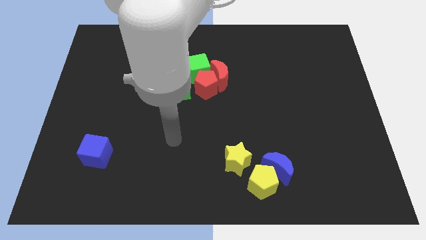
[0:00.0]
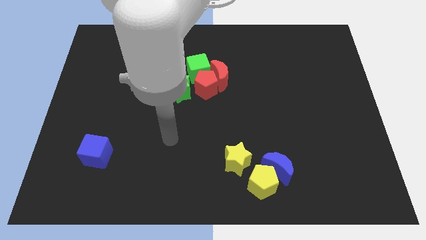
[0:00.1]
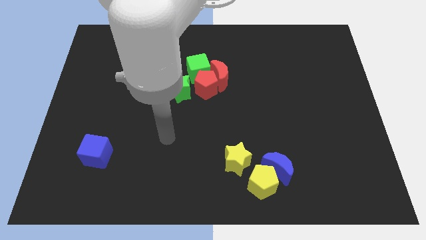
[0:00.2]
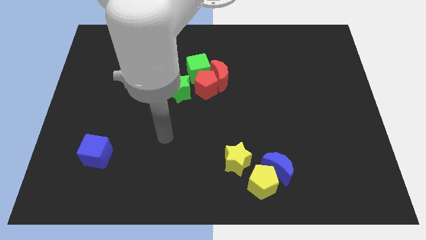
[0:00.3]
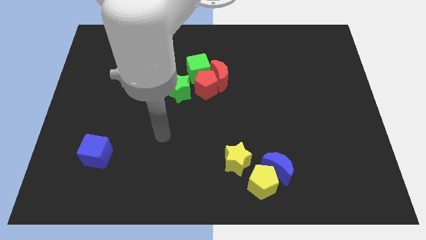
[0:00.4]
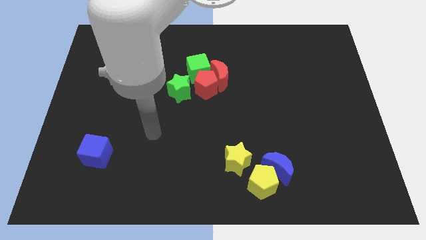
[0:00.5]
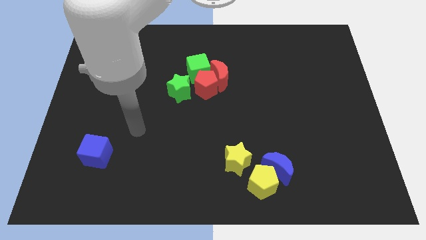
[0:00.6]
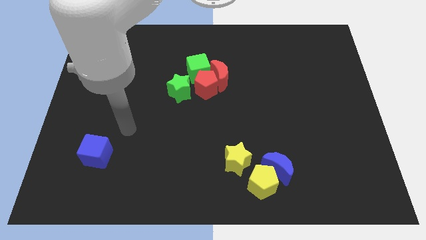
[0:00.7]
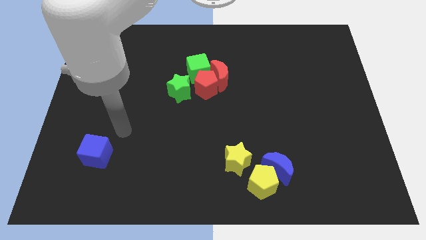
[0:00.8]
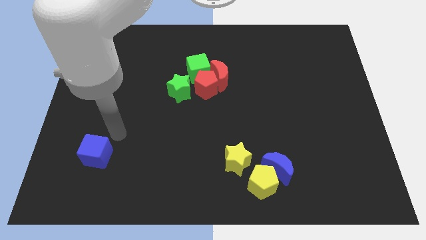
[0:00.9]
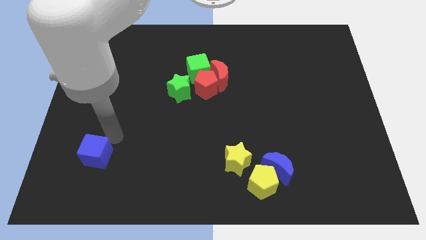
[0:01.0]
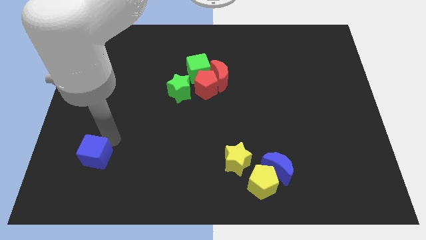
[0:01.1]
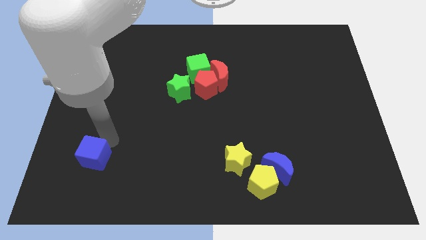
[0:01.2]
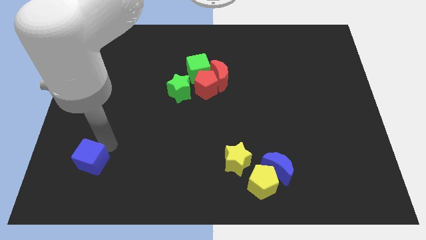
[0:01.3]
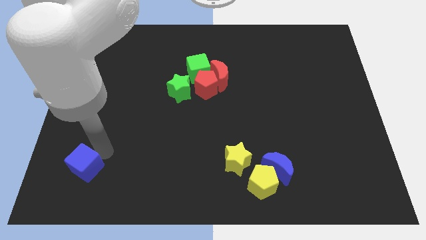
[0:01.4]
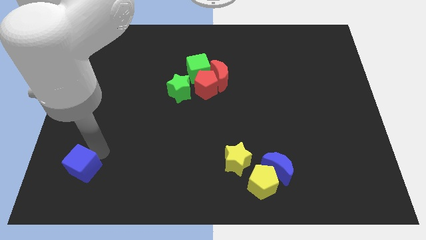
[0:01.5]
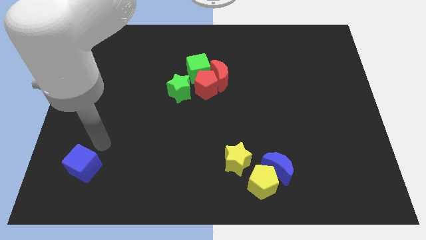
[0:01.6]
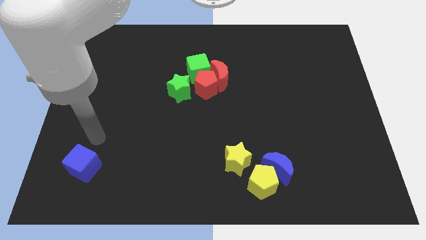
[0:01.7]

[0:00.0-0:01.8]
place your arm to top of the blue cube

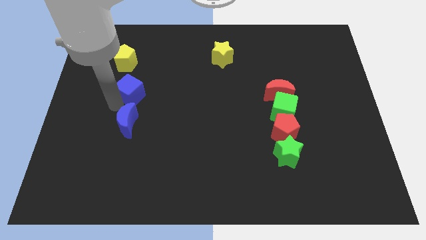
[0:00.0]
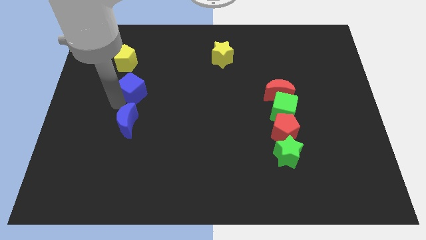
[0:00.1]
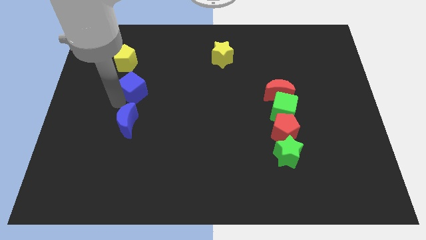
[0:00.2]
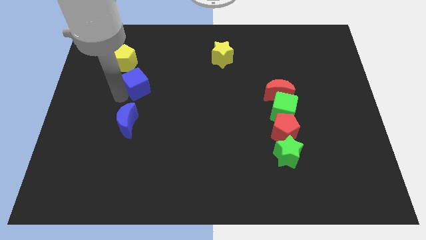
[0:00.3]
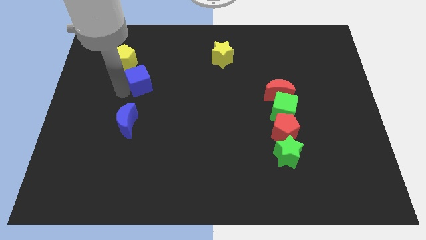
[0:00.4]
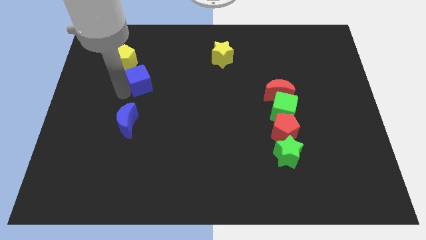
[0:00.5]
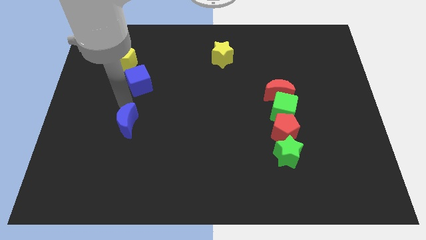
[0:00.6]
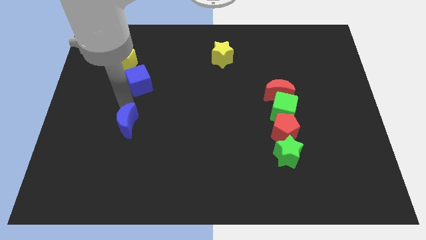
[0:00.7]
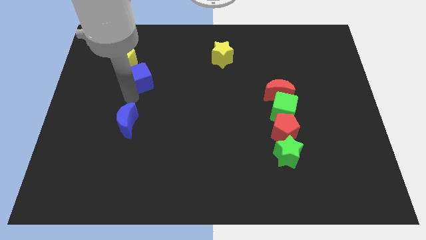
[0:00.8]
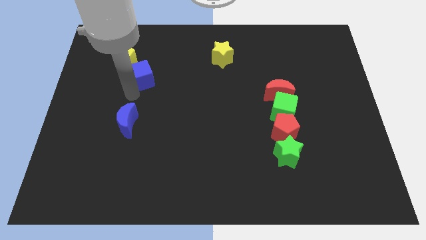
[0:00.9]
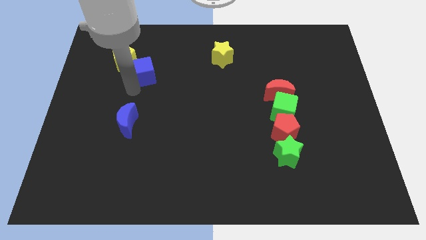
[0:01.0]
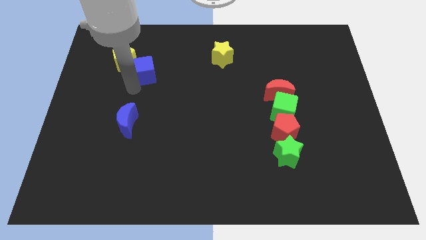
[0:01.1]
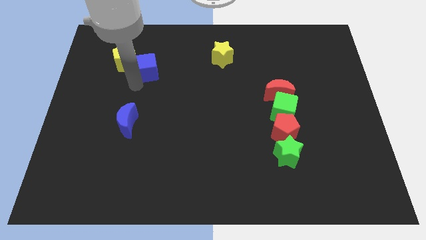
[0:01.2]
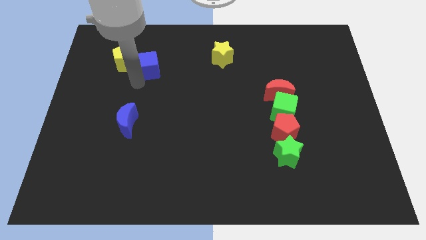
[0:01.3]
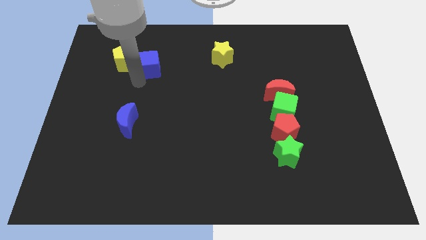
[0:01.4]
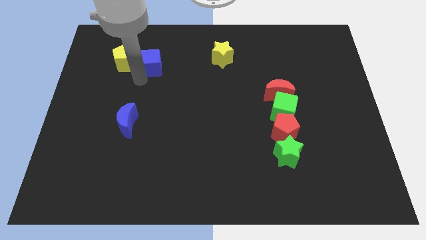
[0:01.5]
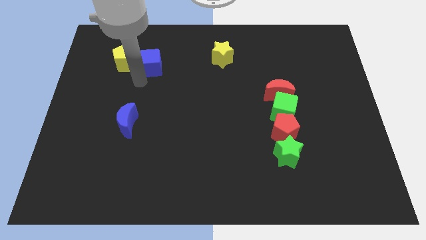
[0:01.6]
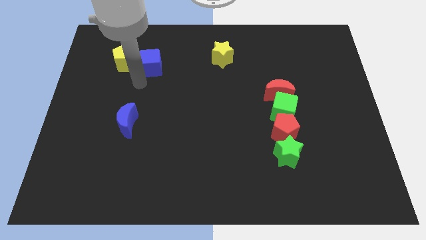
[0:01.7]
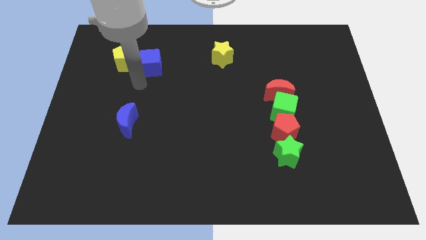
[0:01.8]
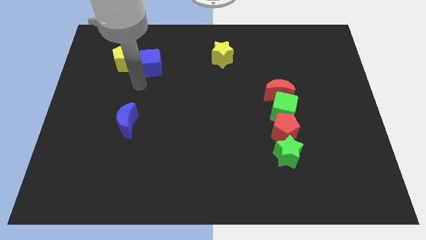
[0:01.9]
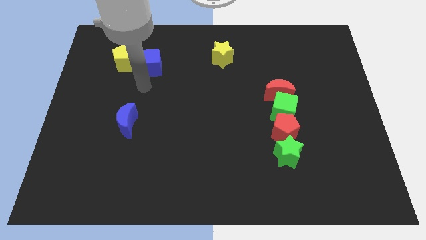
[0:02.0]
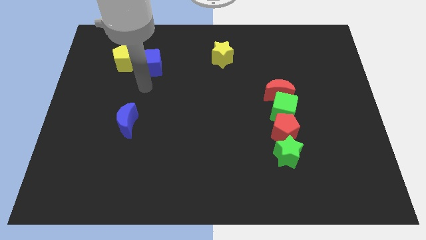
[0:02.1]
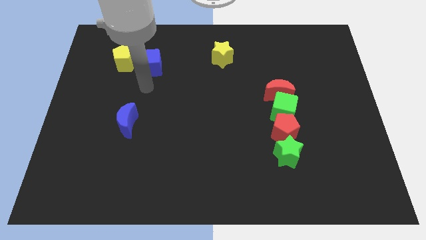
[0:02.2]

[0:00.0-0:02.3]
move the blue cube to the right side of the yellow pentagon

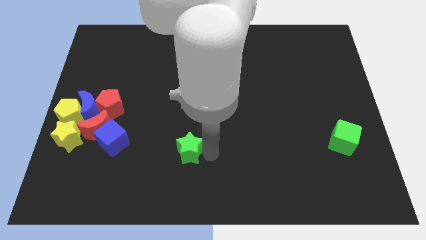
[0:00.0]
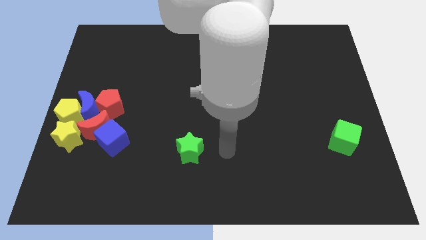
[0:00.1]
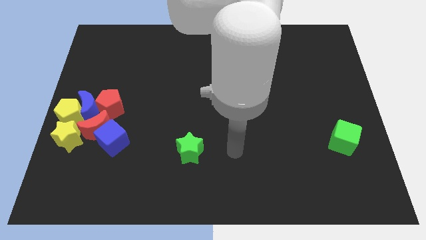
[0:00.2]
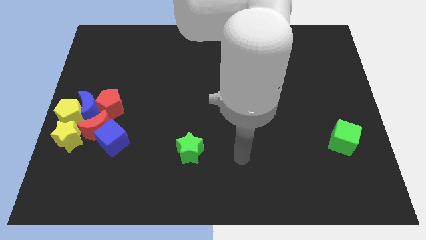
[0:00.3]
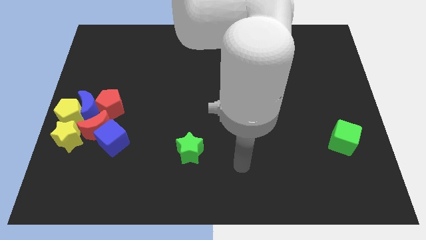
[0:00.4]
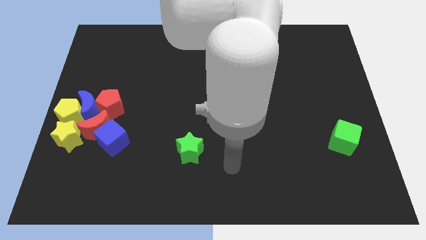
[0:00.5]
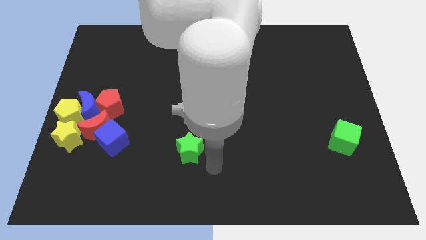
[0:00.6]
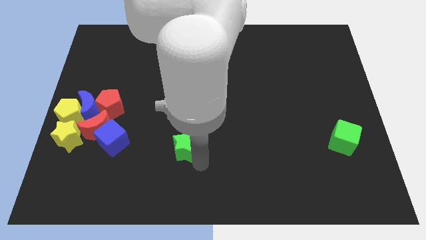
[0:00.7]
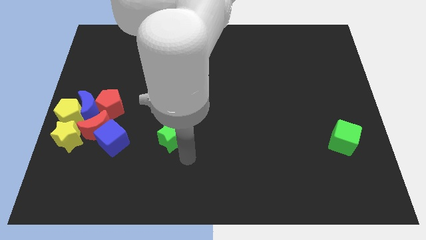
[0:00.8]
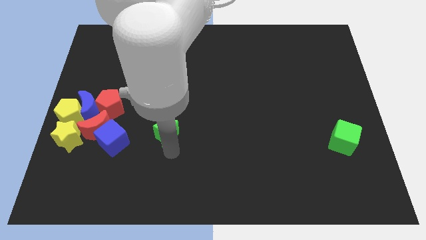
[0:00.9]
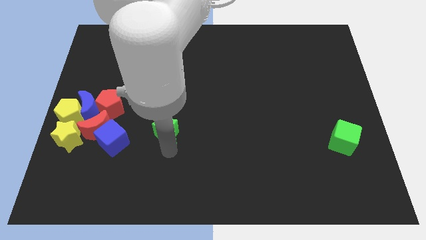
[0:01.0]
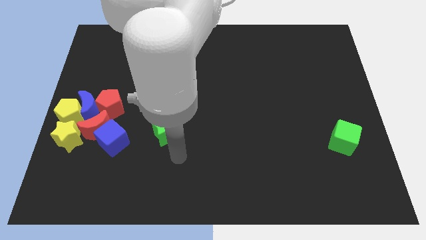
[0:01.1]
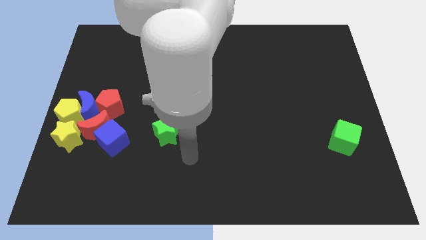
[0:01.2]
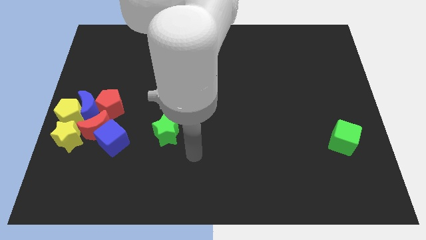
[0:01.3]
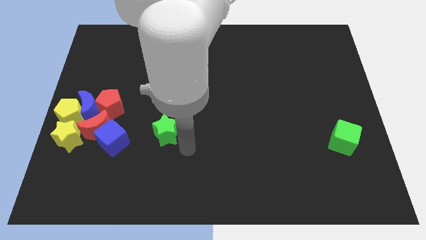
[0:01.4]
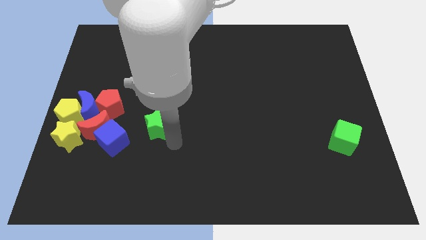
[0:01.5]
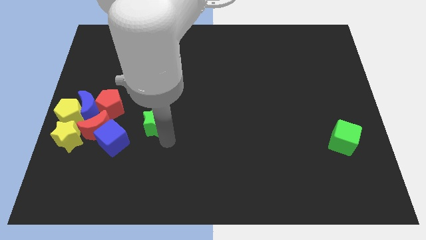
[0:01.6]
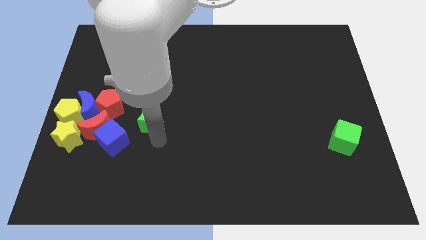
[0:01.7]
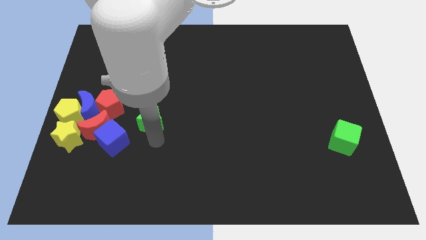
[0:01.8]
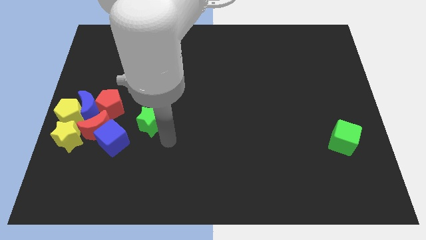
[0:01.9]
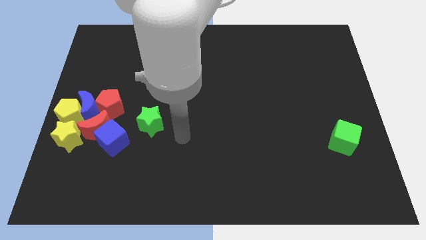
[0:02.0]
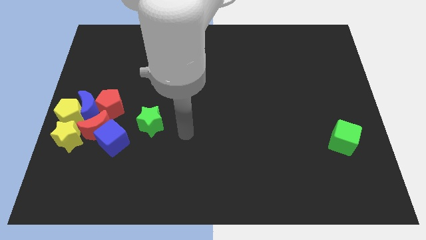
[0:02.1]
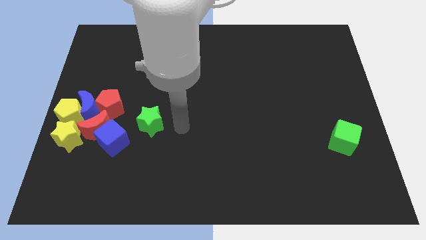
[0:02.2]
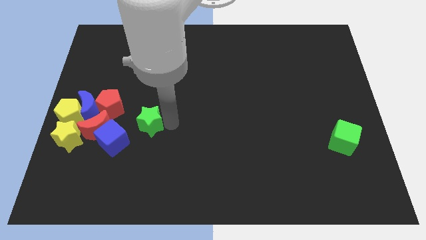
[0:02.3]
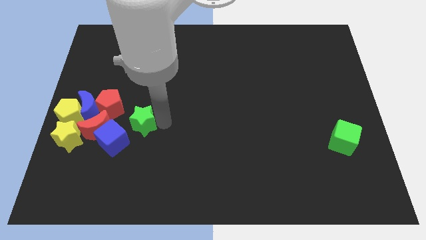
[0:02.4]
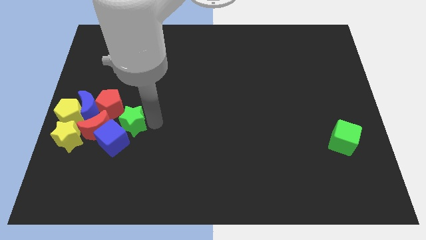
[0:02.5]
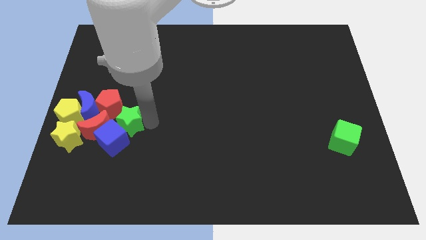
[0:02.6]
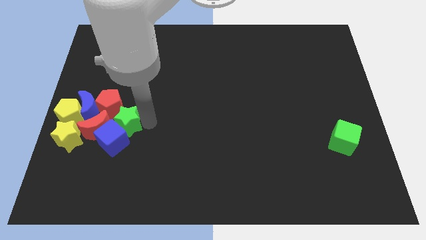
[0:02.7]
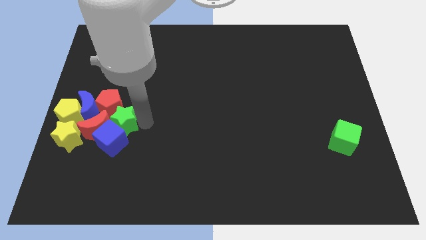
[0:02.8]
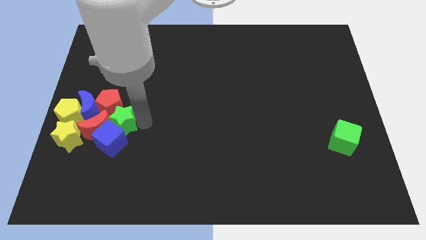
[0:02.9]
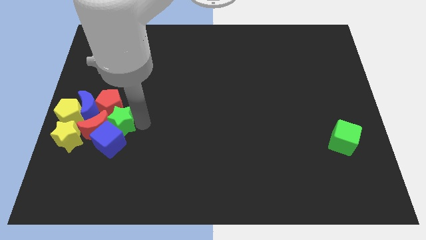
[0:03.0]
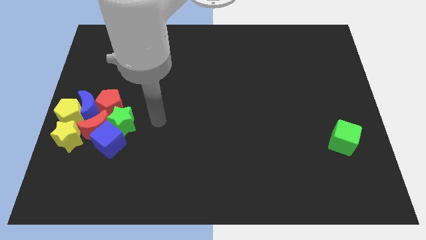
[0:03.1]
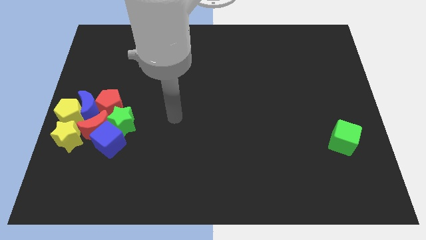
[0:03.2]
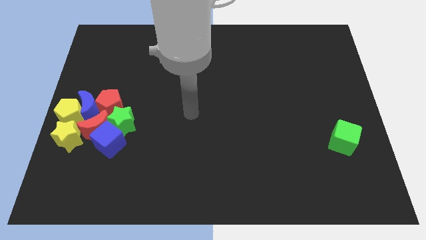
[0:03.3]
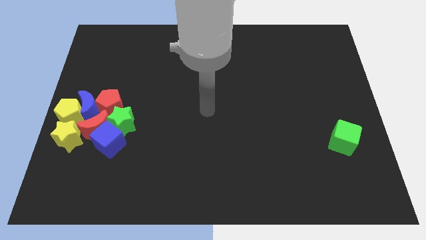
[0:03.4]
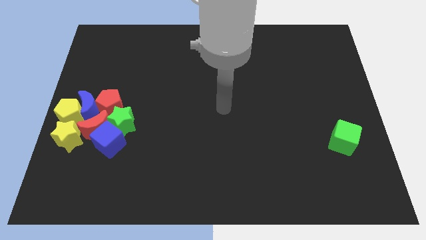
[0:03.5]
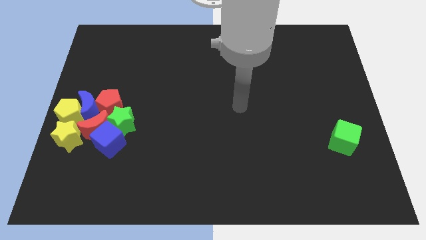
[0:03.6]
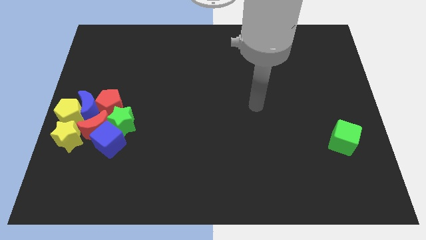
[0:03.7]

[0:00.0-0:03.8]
push the green star into the group of blocks

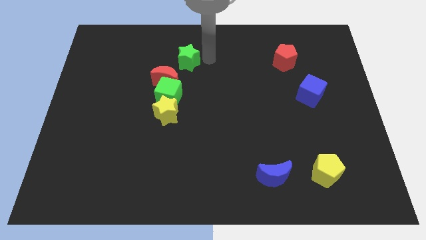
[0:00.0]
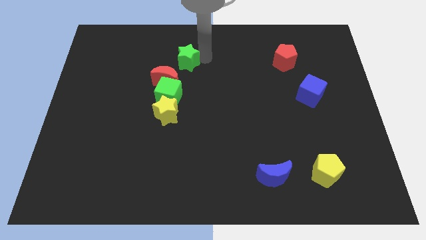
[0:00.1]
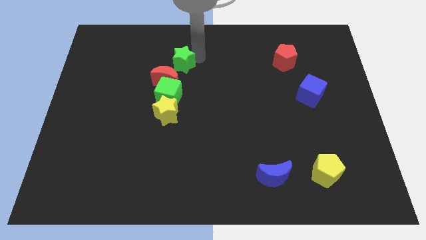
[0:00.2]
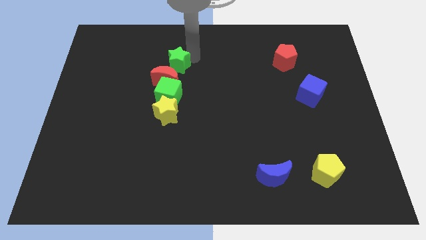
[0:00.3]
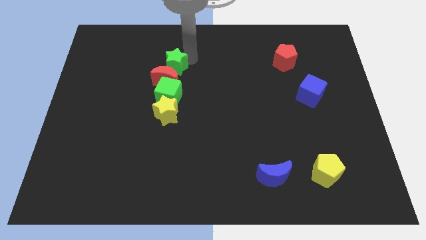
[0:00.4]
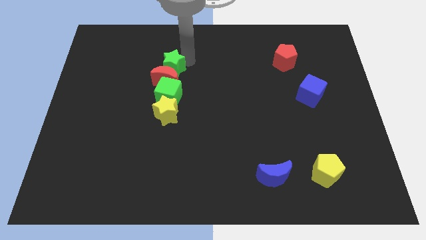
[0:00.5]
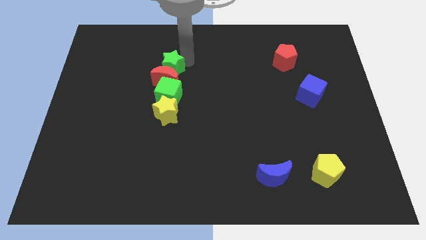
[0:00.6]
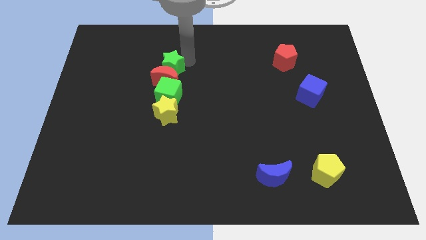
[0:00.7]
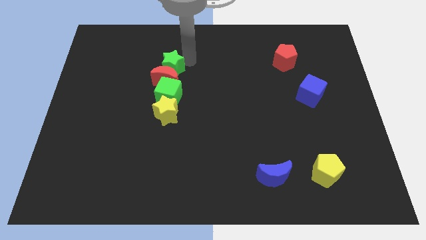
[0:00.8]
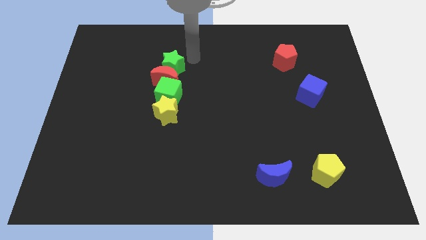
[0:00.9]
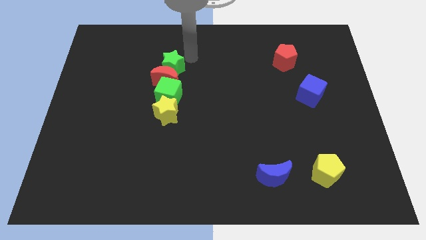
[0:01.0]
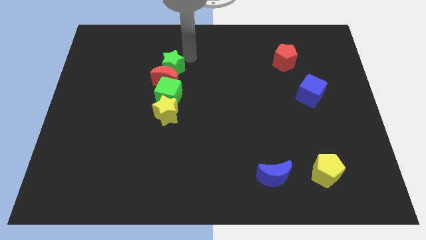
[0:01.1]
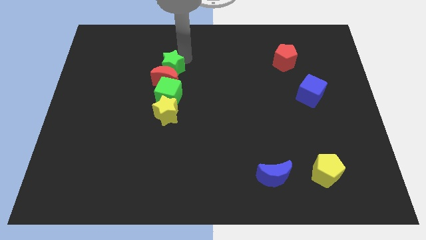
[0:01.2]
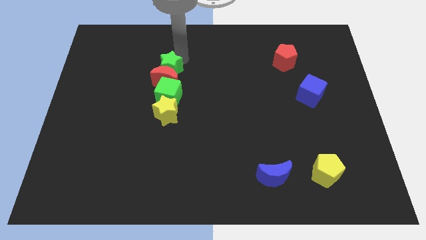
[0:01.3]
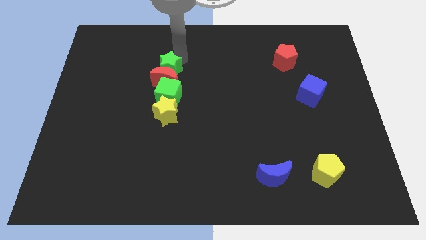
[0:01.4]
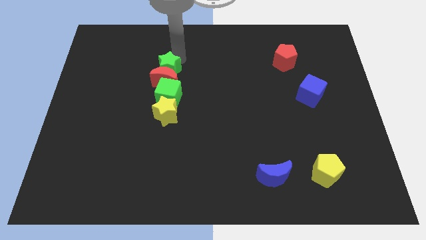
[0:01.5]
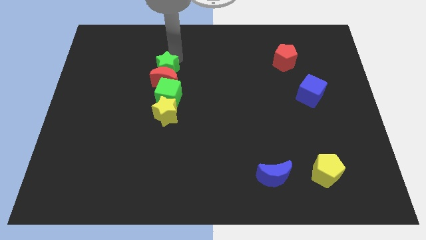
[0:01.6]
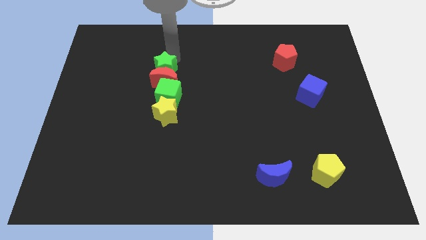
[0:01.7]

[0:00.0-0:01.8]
move green star into red moon
